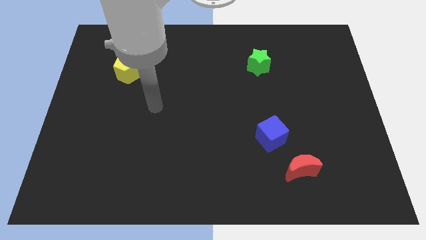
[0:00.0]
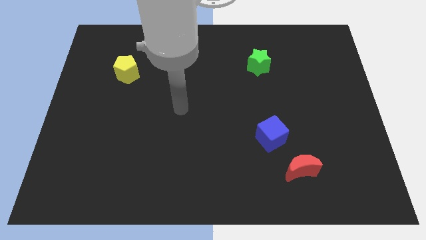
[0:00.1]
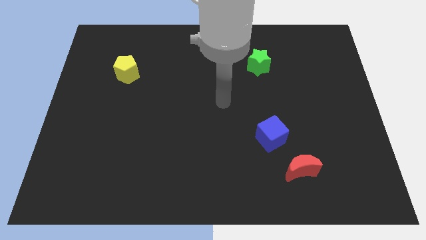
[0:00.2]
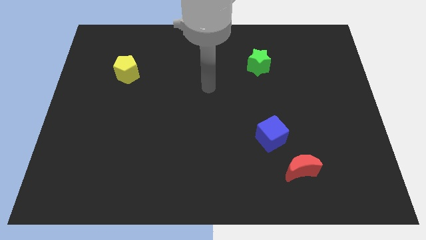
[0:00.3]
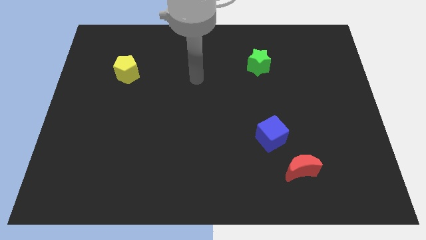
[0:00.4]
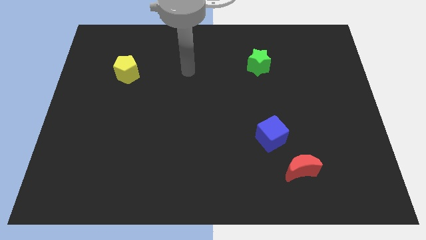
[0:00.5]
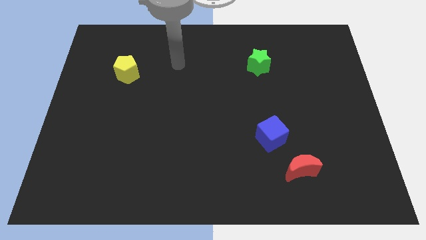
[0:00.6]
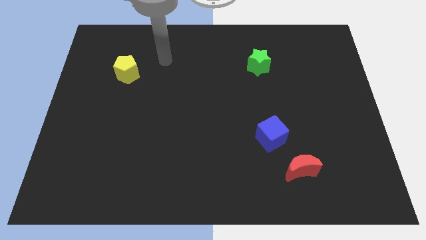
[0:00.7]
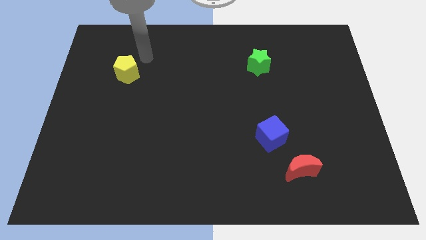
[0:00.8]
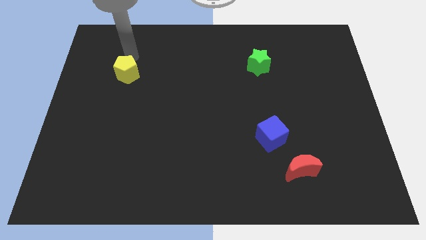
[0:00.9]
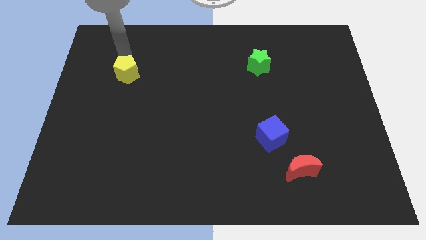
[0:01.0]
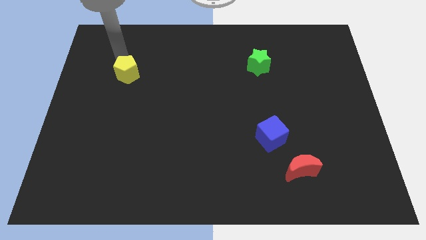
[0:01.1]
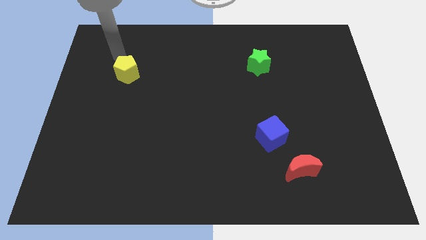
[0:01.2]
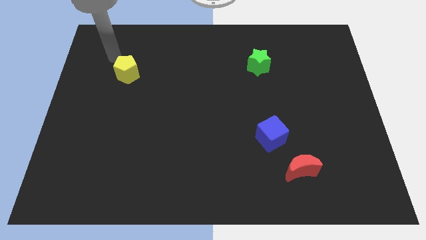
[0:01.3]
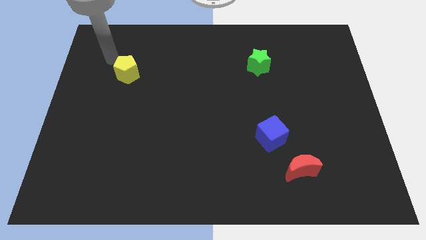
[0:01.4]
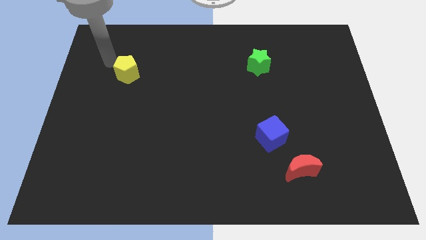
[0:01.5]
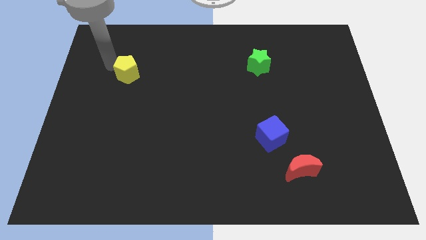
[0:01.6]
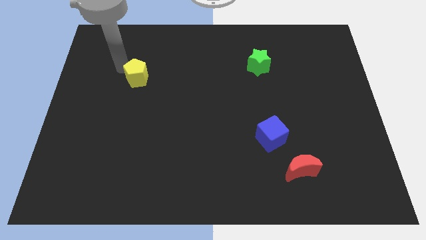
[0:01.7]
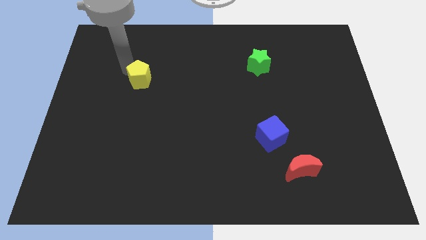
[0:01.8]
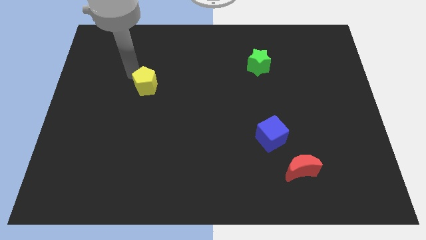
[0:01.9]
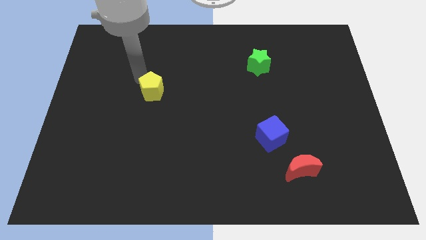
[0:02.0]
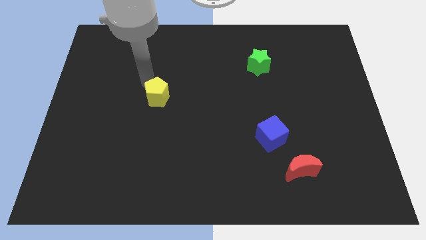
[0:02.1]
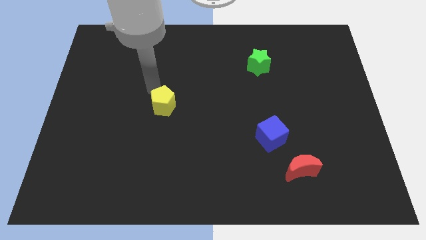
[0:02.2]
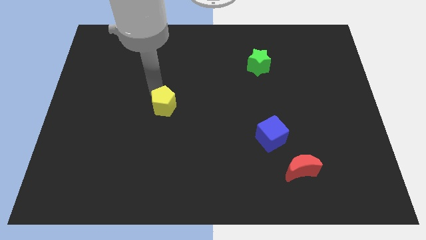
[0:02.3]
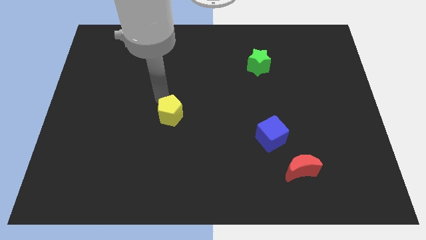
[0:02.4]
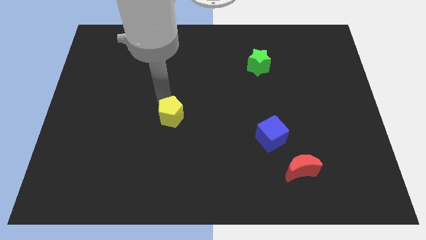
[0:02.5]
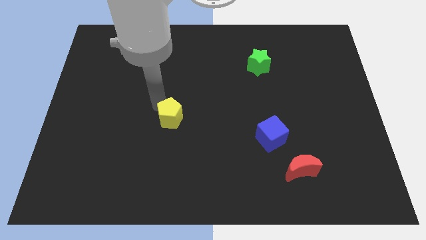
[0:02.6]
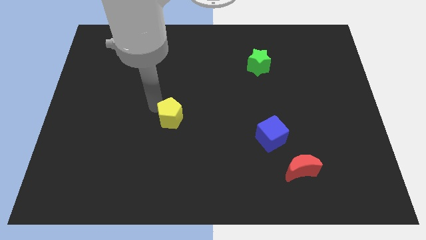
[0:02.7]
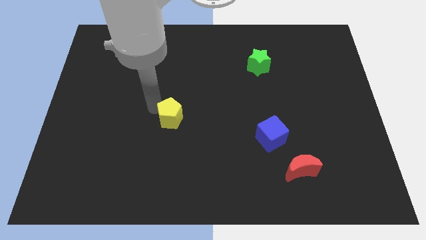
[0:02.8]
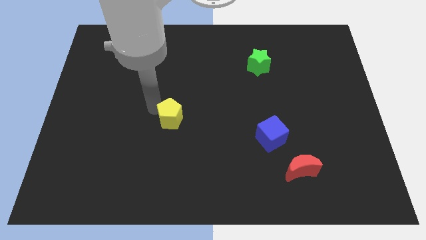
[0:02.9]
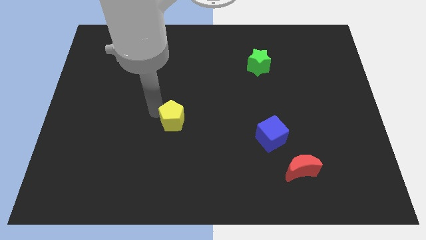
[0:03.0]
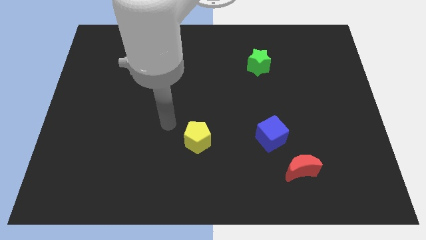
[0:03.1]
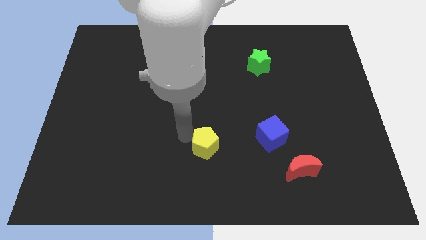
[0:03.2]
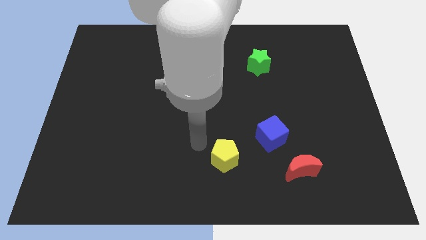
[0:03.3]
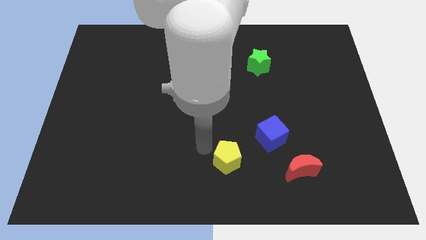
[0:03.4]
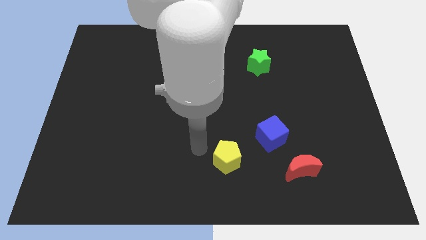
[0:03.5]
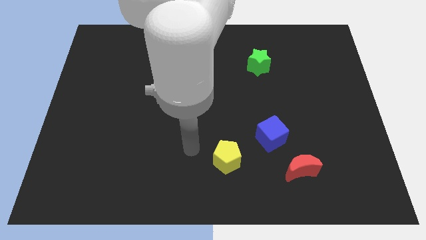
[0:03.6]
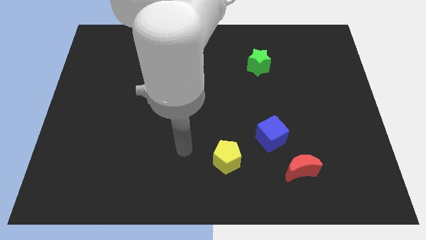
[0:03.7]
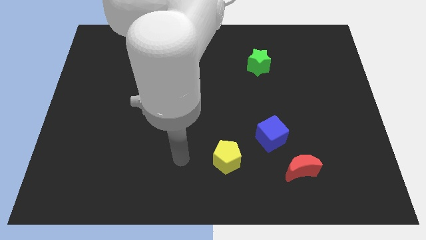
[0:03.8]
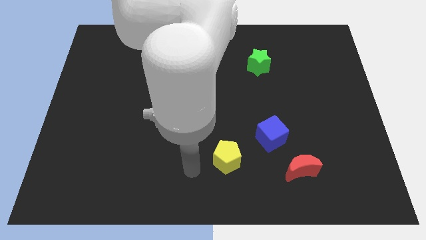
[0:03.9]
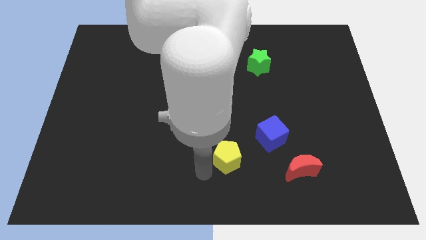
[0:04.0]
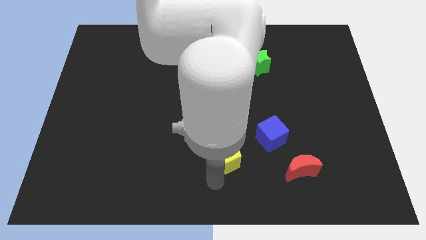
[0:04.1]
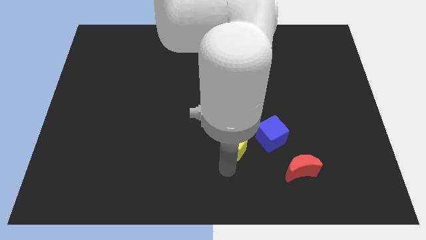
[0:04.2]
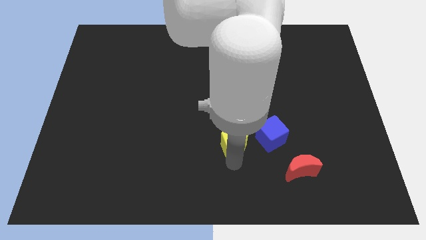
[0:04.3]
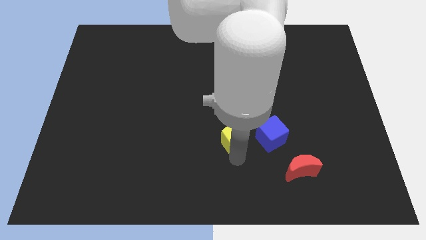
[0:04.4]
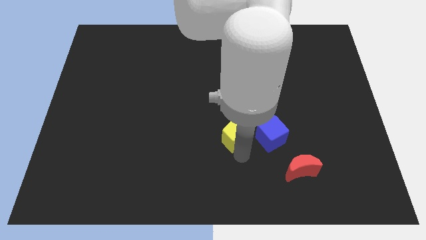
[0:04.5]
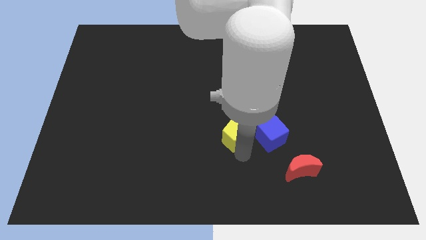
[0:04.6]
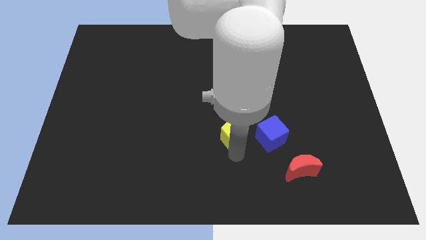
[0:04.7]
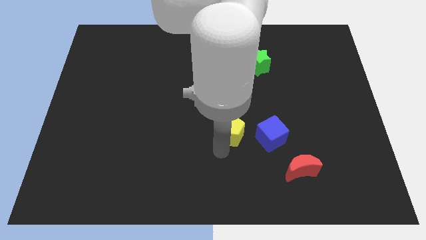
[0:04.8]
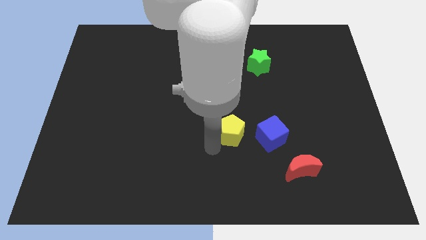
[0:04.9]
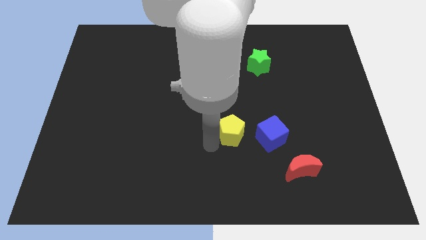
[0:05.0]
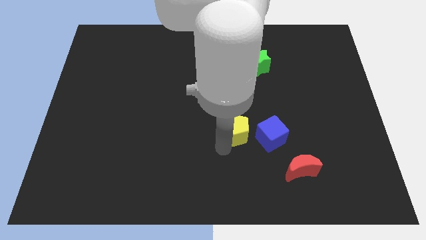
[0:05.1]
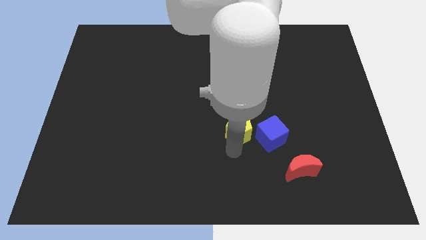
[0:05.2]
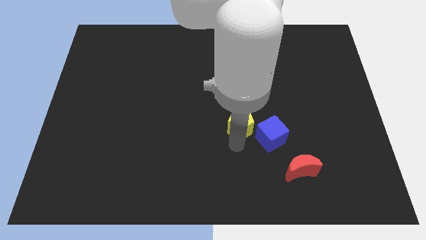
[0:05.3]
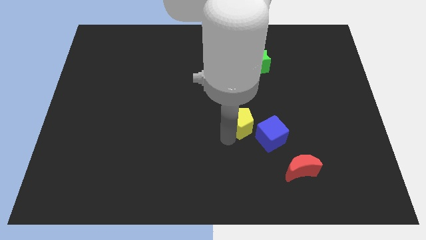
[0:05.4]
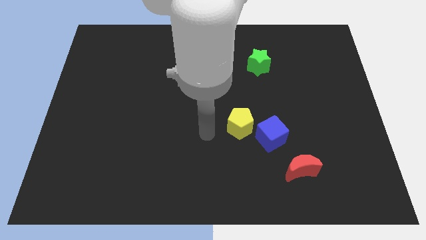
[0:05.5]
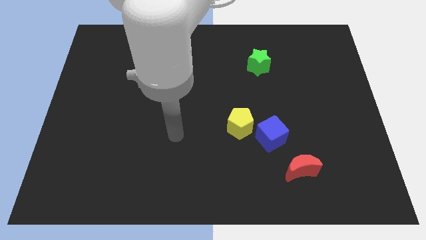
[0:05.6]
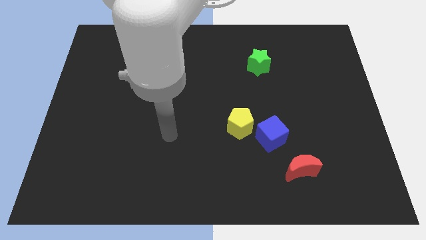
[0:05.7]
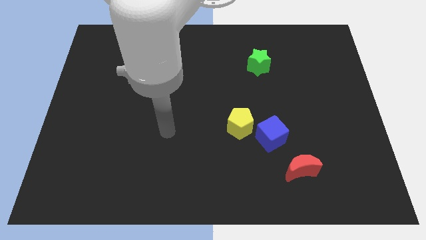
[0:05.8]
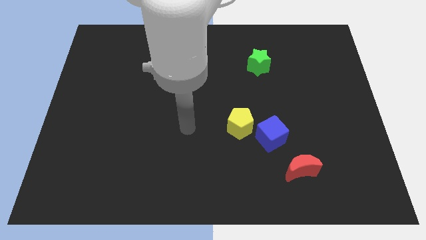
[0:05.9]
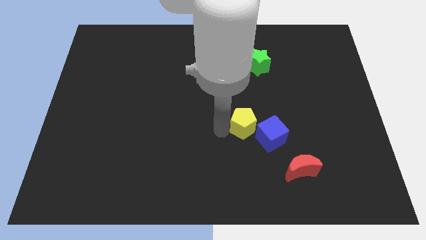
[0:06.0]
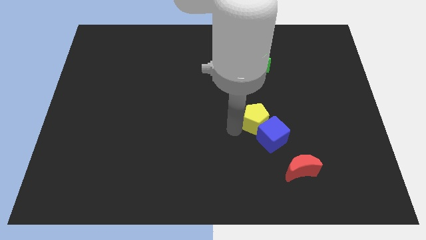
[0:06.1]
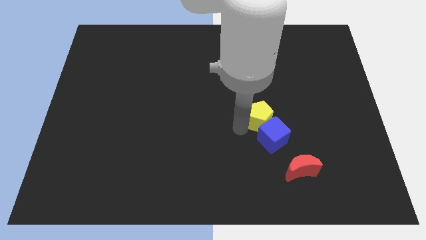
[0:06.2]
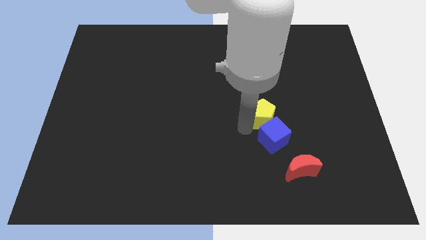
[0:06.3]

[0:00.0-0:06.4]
push the pentagon to the cube

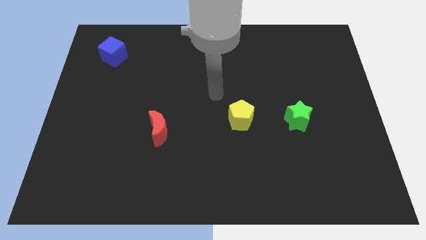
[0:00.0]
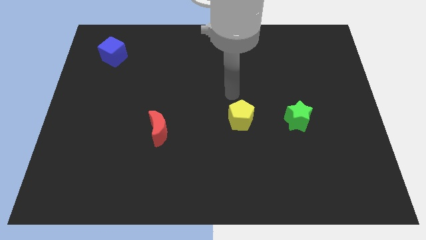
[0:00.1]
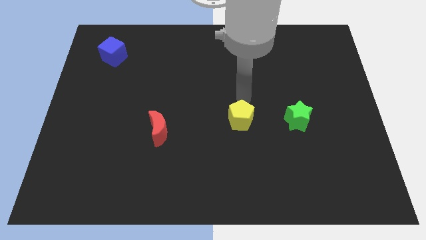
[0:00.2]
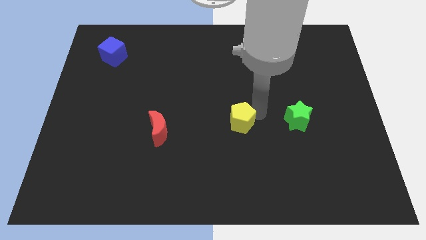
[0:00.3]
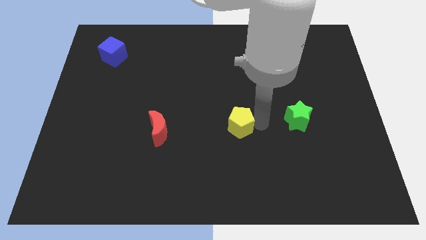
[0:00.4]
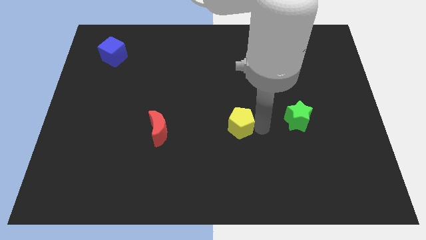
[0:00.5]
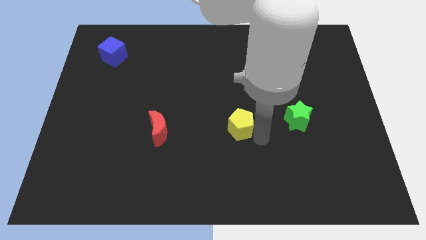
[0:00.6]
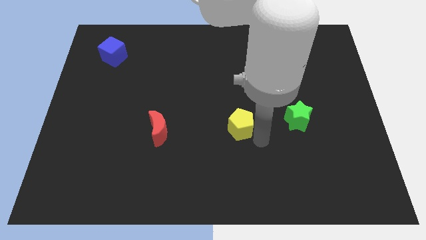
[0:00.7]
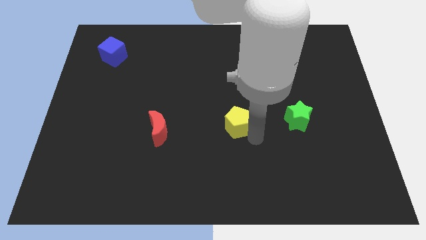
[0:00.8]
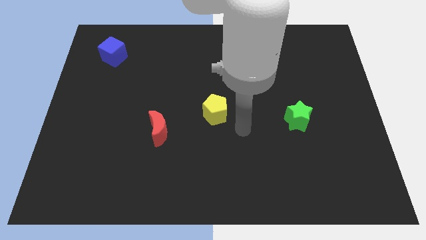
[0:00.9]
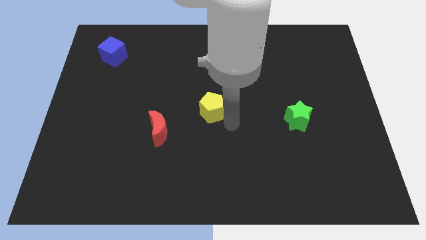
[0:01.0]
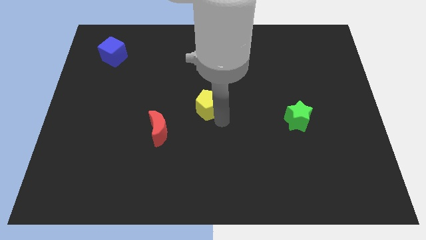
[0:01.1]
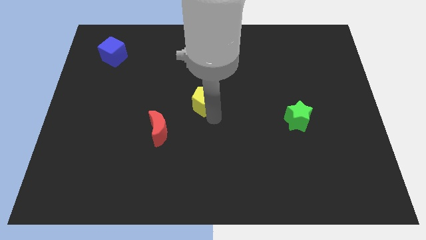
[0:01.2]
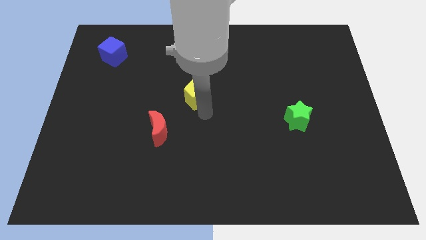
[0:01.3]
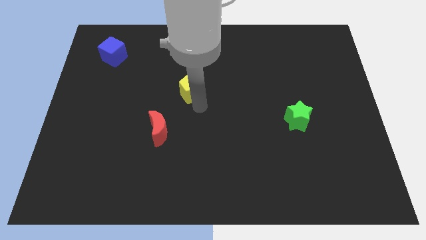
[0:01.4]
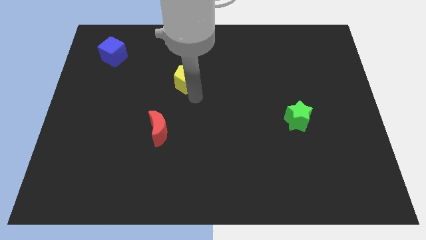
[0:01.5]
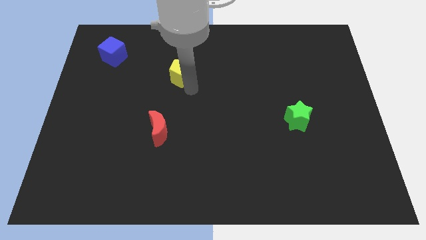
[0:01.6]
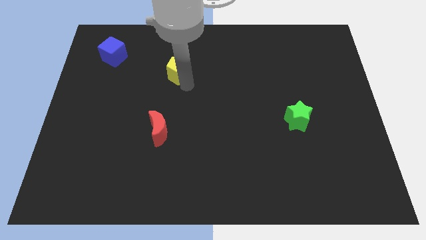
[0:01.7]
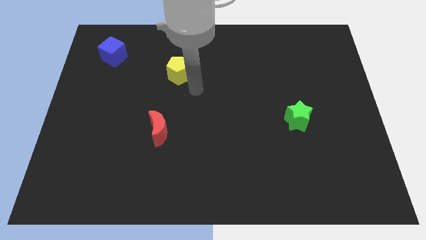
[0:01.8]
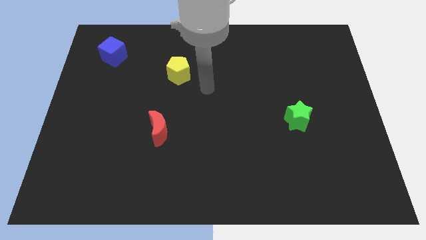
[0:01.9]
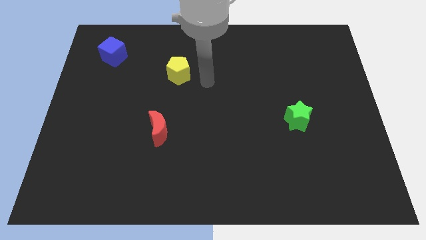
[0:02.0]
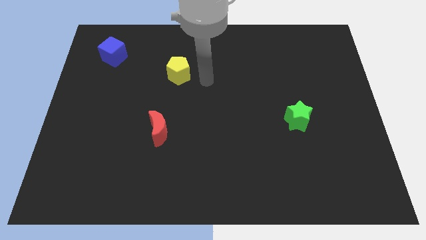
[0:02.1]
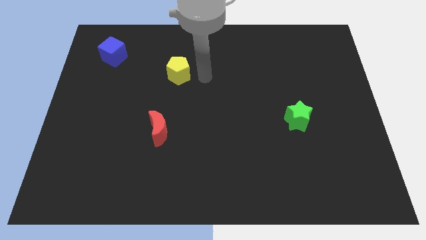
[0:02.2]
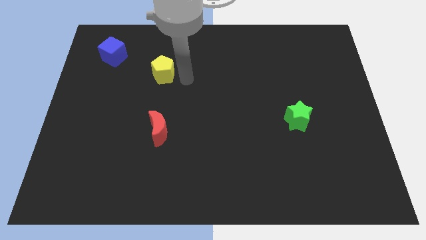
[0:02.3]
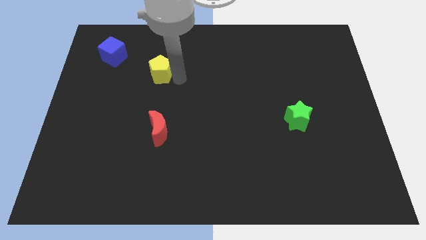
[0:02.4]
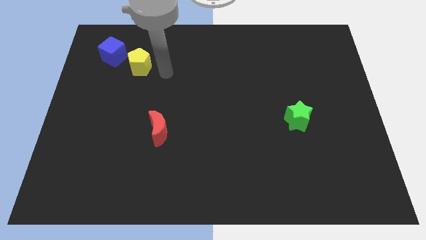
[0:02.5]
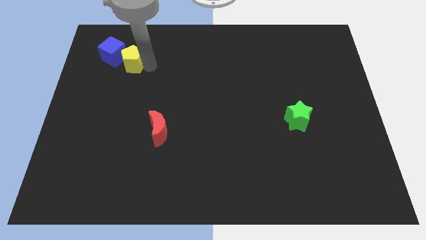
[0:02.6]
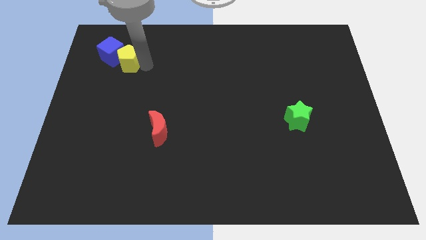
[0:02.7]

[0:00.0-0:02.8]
push the pentagon towards the blue cube
